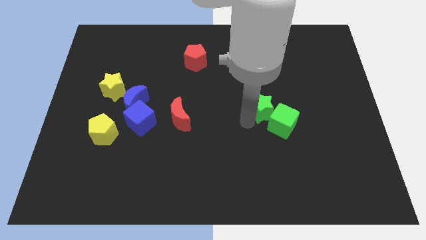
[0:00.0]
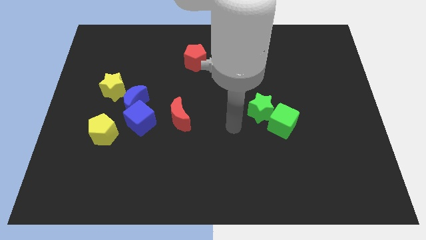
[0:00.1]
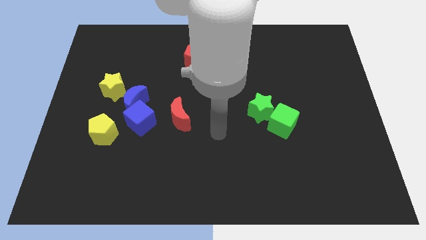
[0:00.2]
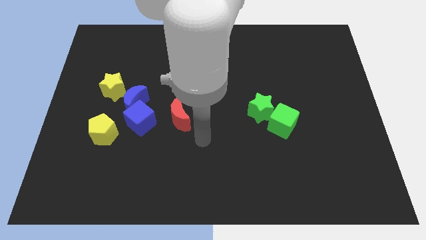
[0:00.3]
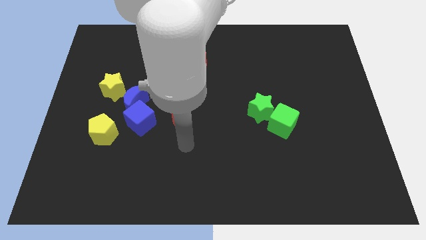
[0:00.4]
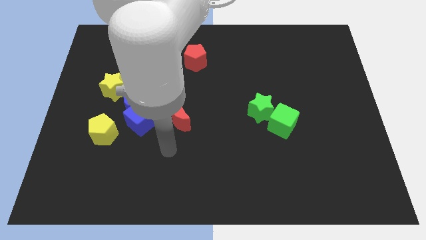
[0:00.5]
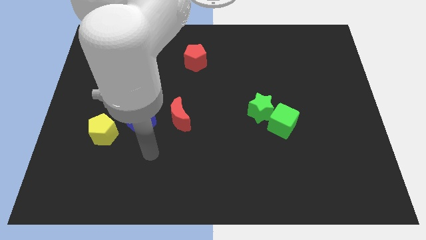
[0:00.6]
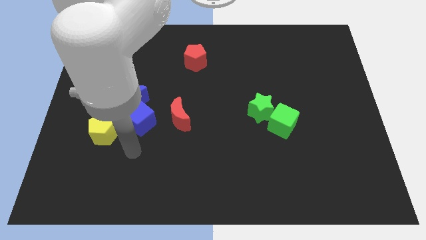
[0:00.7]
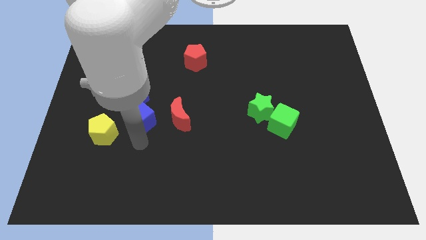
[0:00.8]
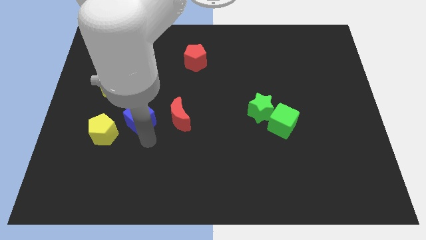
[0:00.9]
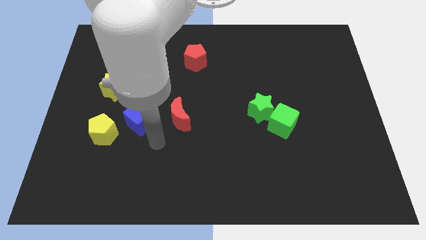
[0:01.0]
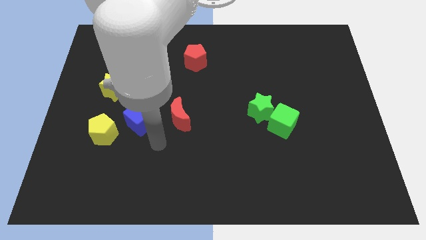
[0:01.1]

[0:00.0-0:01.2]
move your arm away to the bottom right of the blue cube

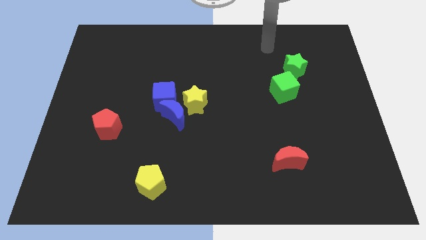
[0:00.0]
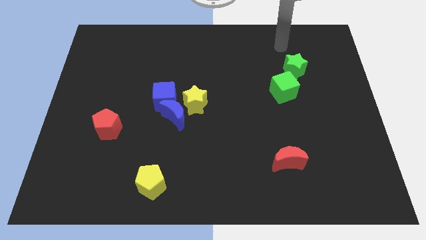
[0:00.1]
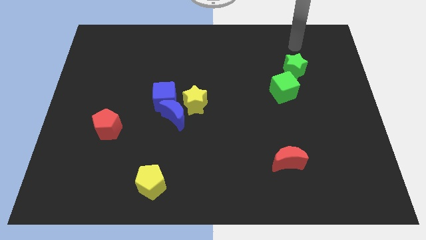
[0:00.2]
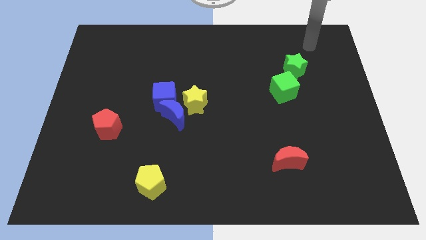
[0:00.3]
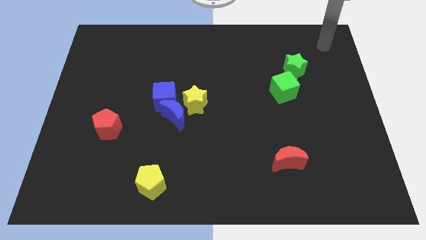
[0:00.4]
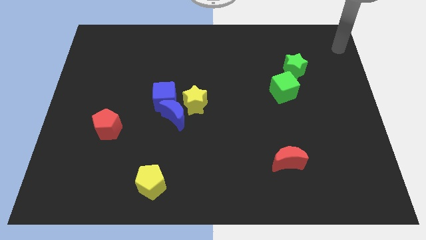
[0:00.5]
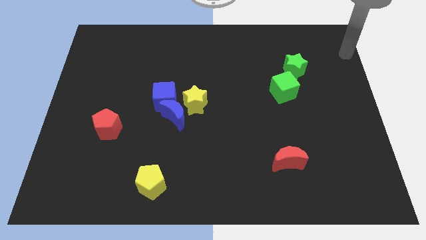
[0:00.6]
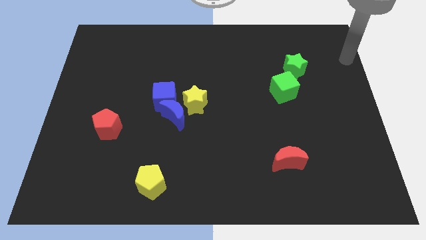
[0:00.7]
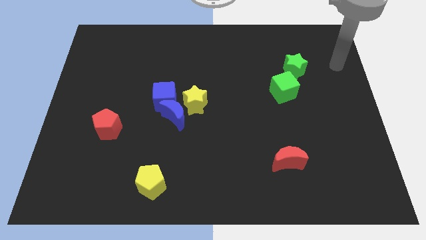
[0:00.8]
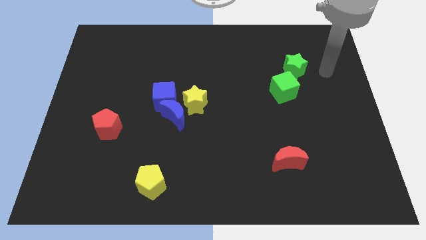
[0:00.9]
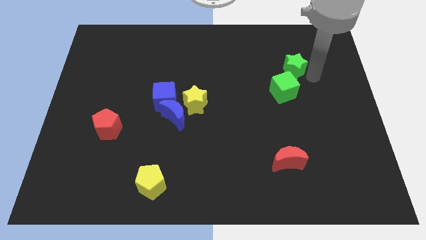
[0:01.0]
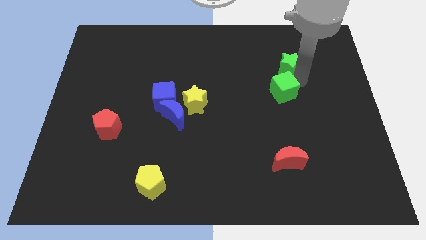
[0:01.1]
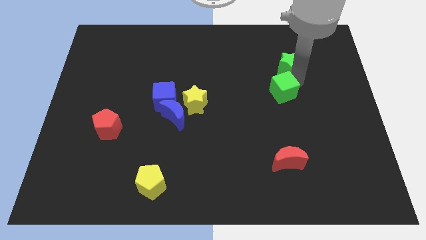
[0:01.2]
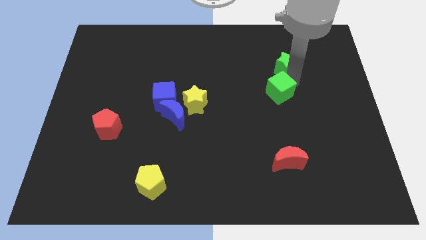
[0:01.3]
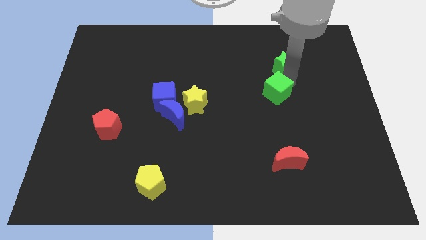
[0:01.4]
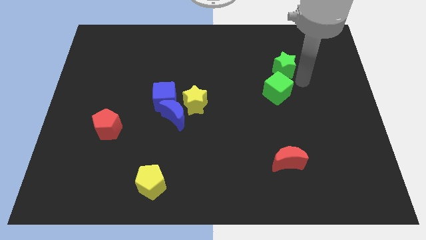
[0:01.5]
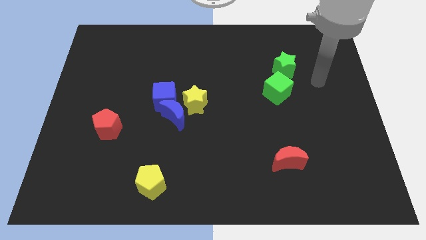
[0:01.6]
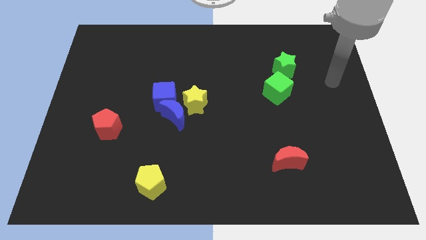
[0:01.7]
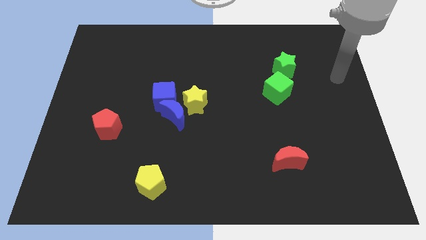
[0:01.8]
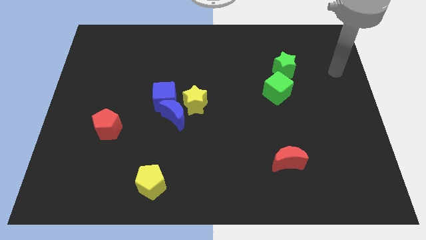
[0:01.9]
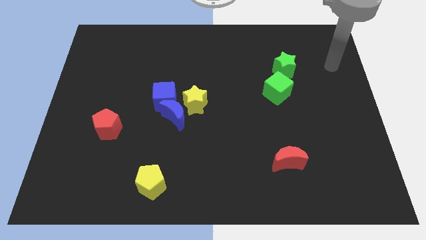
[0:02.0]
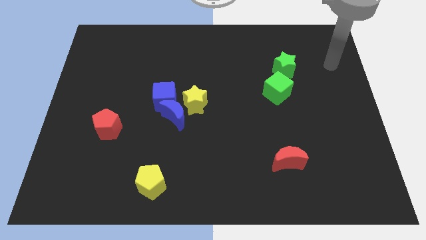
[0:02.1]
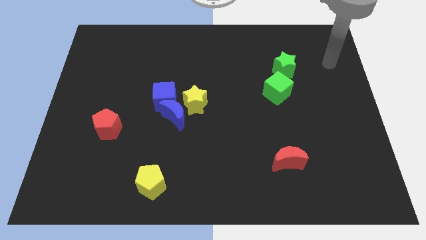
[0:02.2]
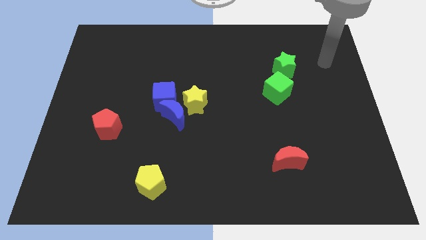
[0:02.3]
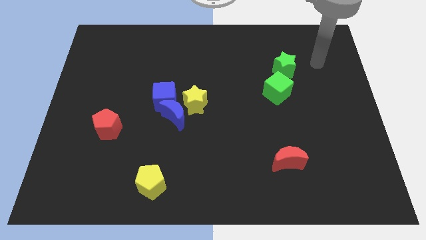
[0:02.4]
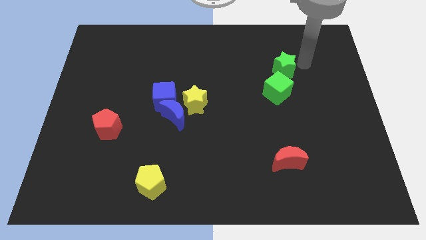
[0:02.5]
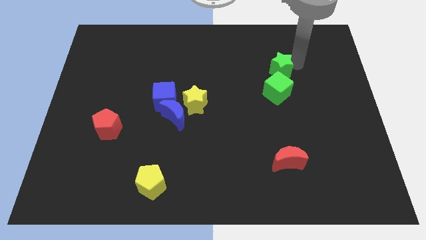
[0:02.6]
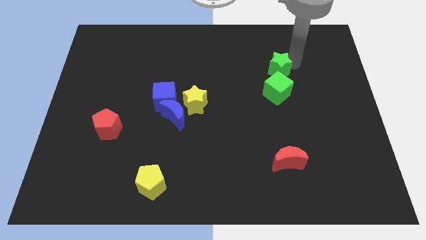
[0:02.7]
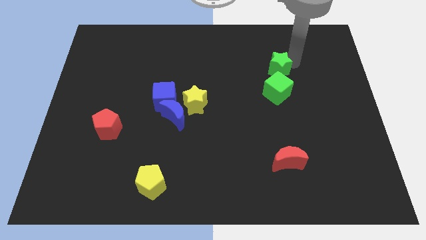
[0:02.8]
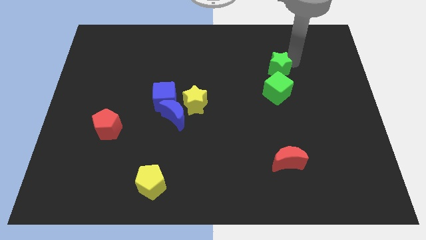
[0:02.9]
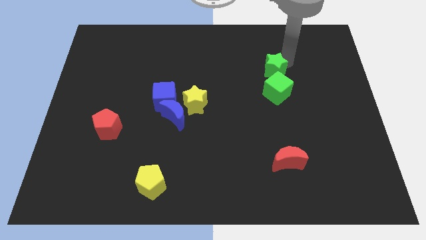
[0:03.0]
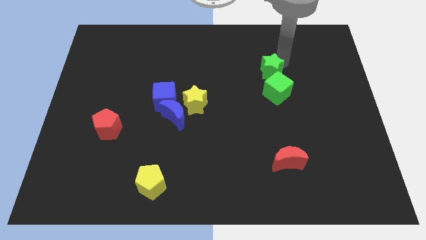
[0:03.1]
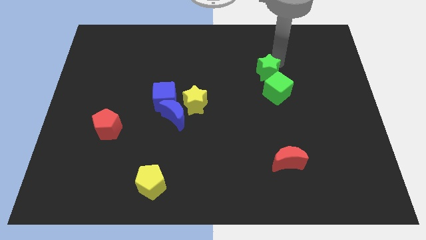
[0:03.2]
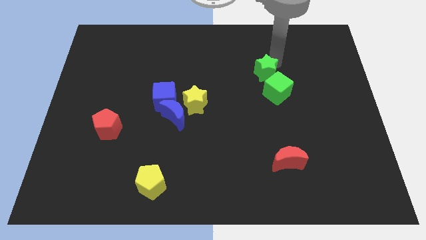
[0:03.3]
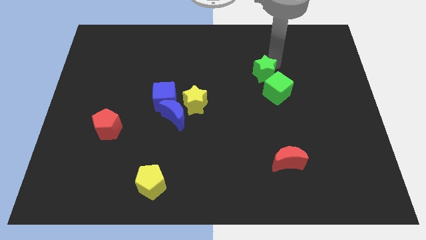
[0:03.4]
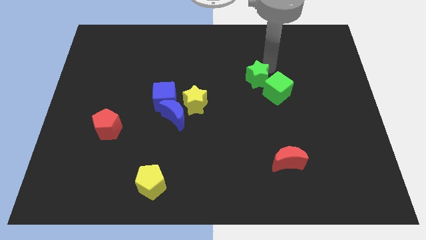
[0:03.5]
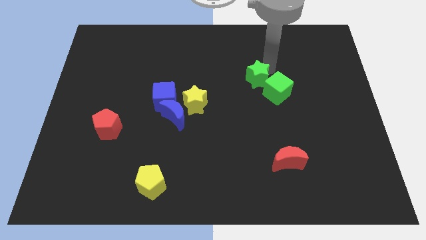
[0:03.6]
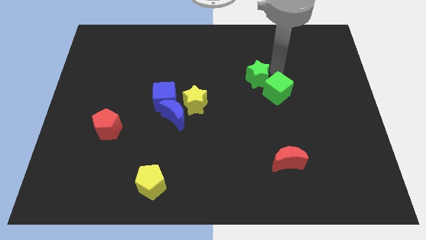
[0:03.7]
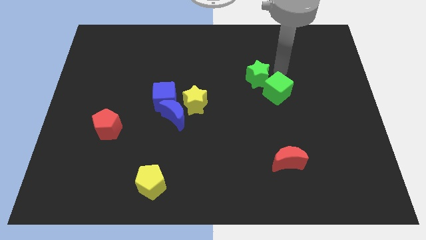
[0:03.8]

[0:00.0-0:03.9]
move the green star left above the green cube

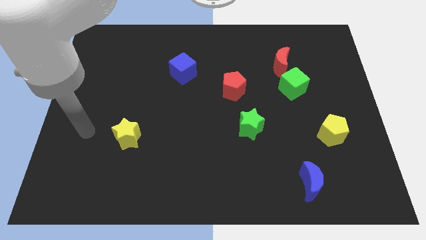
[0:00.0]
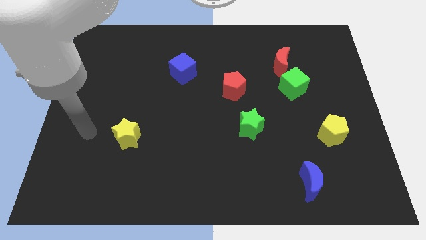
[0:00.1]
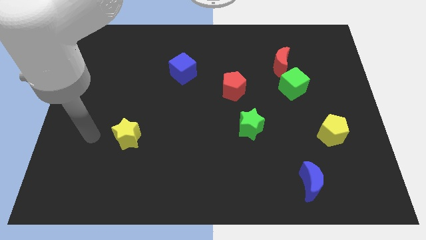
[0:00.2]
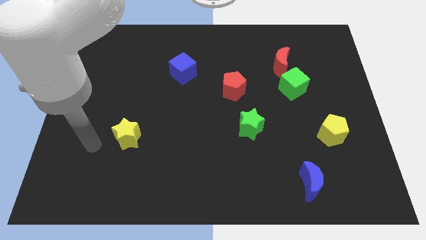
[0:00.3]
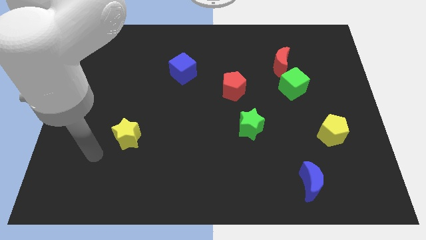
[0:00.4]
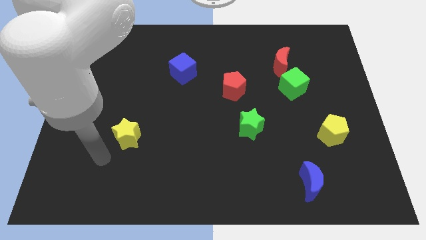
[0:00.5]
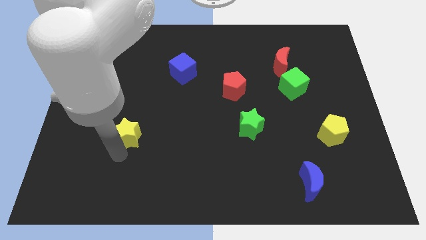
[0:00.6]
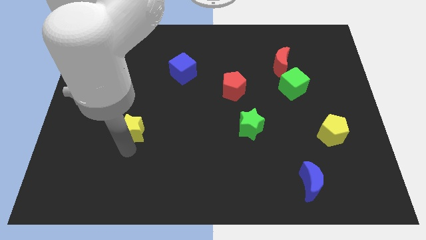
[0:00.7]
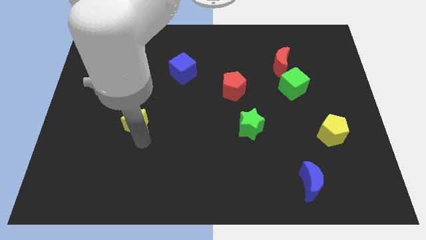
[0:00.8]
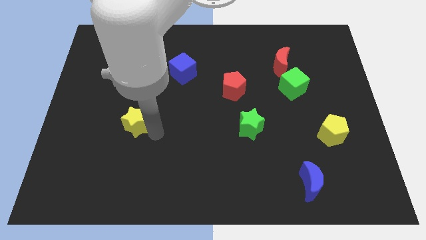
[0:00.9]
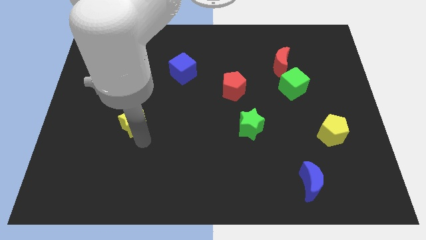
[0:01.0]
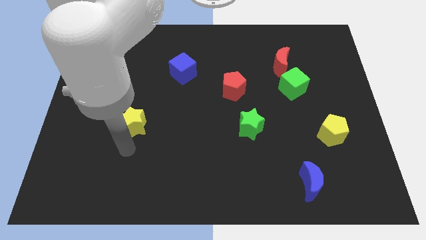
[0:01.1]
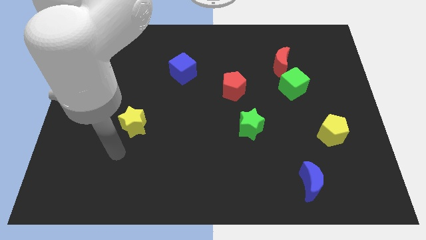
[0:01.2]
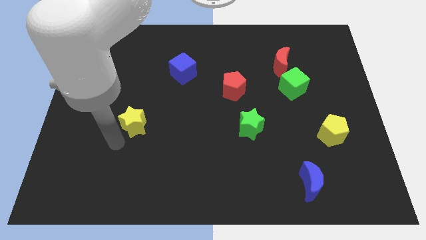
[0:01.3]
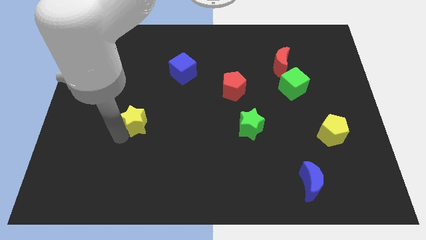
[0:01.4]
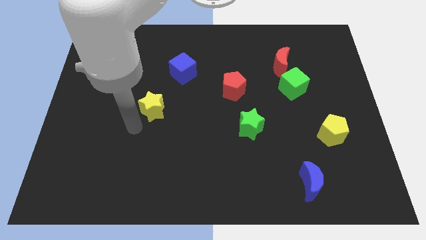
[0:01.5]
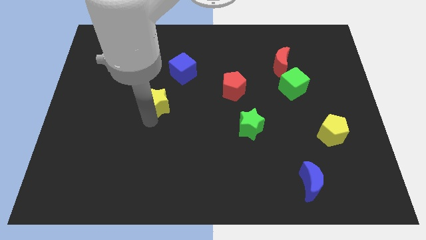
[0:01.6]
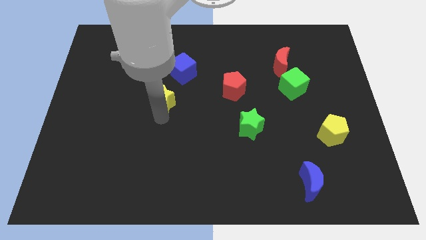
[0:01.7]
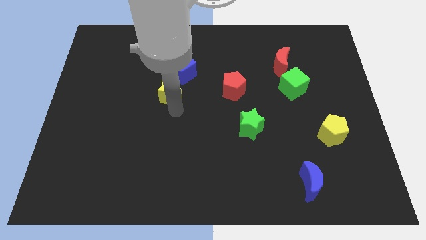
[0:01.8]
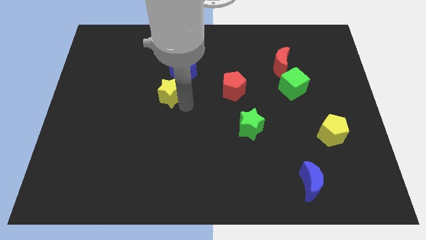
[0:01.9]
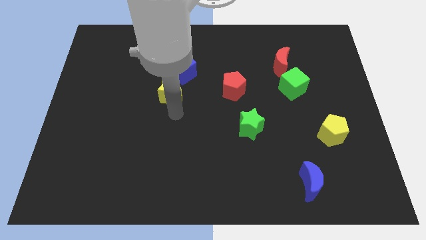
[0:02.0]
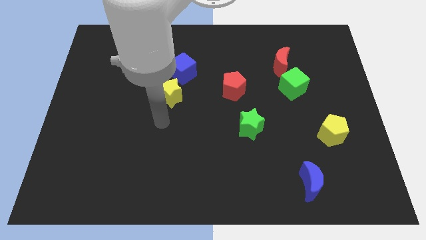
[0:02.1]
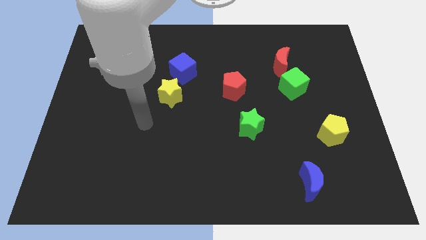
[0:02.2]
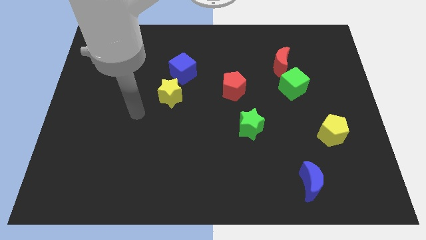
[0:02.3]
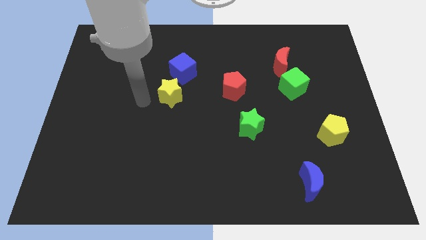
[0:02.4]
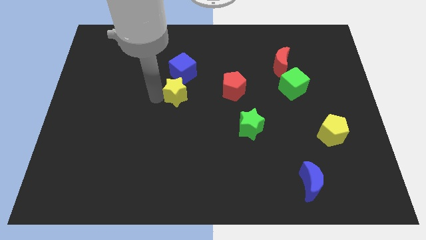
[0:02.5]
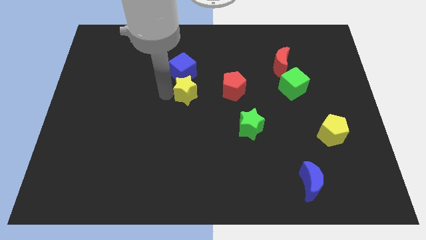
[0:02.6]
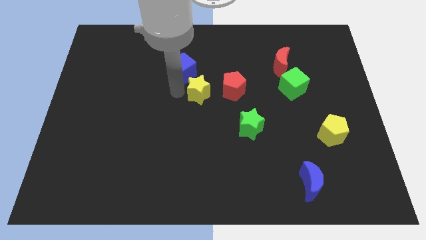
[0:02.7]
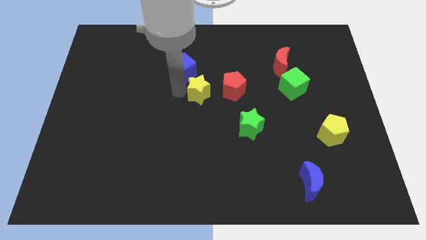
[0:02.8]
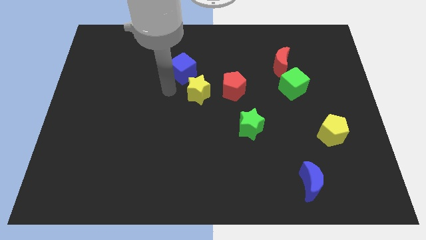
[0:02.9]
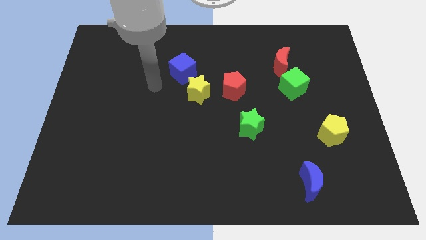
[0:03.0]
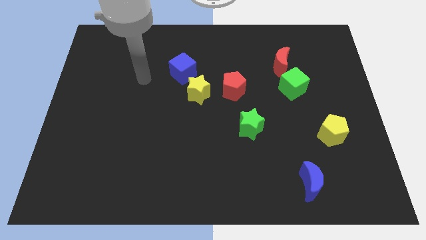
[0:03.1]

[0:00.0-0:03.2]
move the yellow star left to the red pentagon

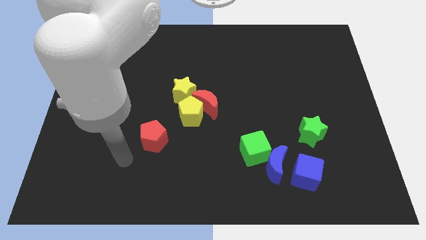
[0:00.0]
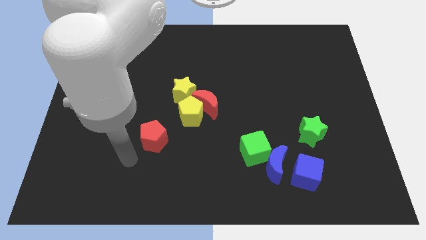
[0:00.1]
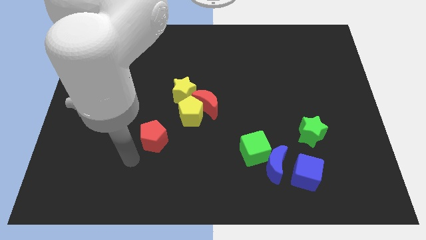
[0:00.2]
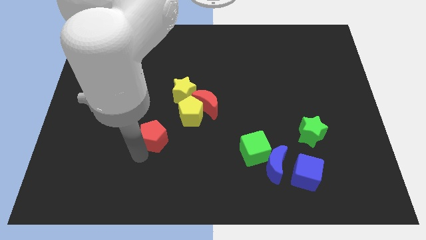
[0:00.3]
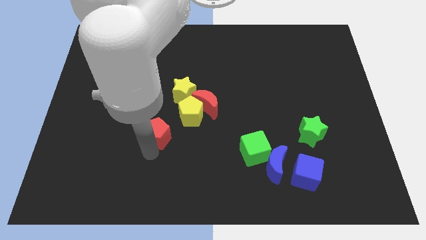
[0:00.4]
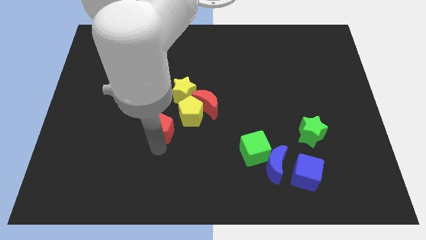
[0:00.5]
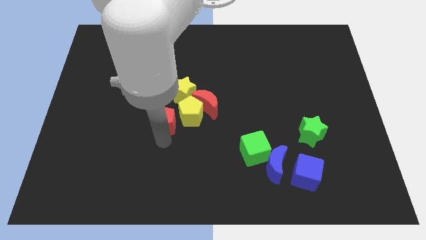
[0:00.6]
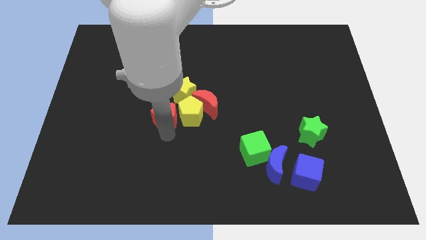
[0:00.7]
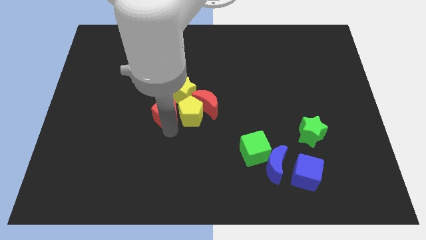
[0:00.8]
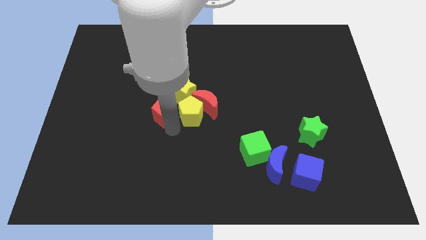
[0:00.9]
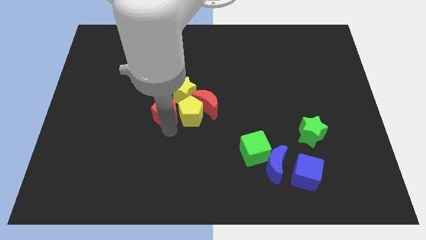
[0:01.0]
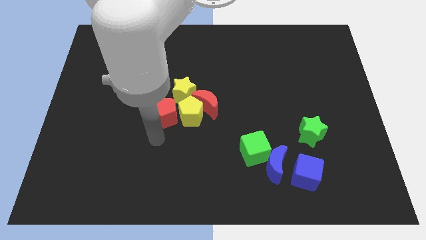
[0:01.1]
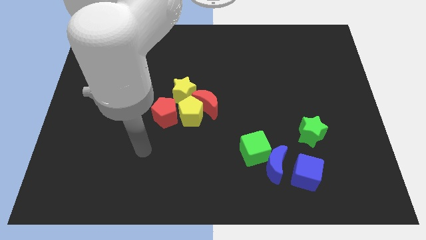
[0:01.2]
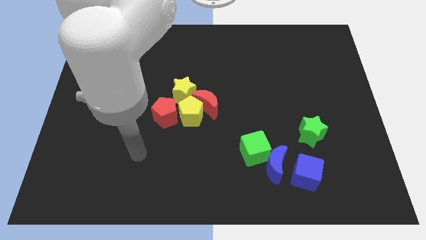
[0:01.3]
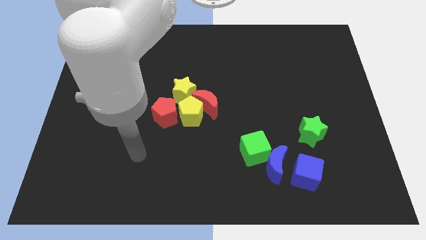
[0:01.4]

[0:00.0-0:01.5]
slide the red pentagon towards the group of blocks
